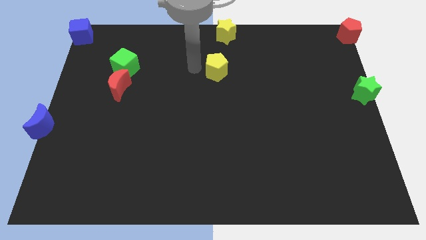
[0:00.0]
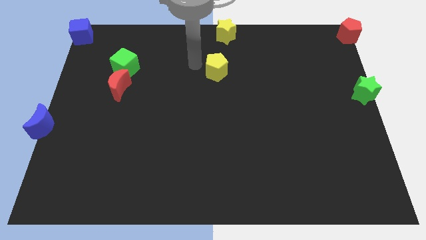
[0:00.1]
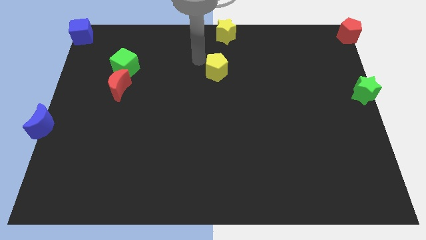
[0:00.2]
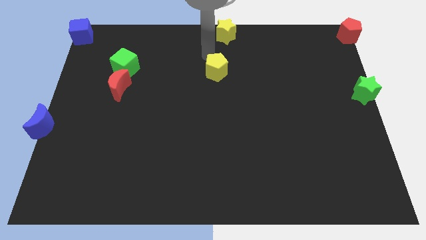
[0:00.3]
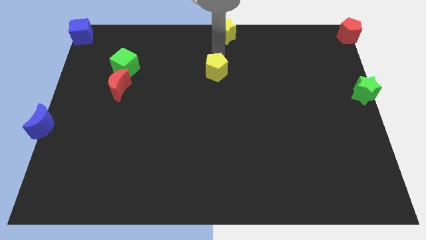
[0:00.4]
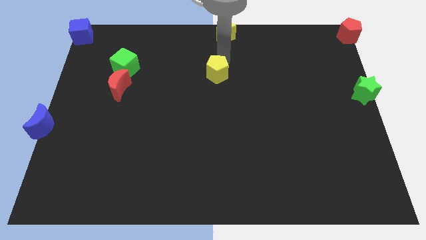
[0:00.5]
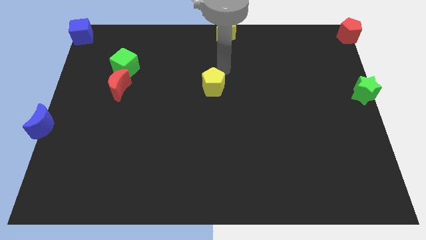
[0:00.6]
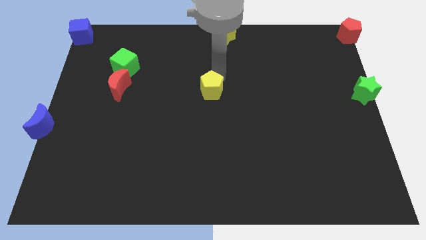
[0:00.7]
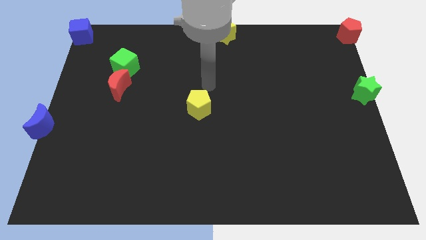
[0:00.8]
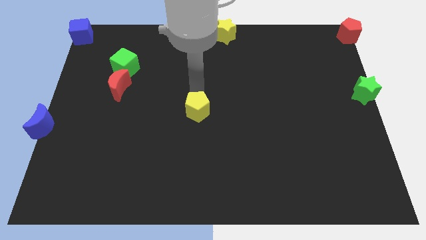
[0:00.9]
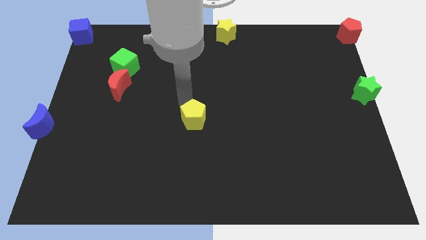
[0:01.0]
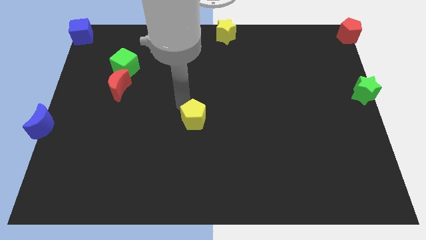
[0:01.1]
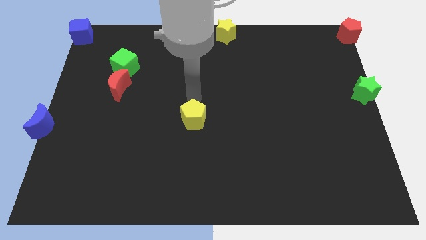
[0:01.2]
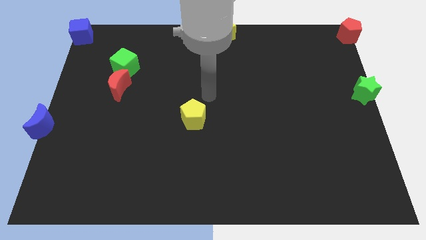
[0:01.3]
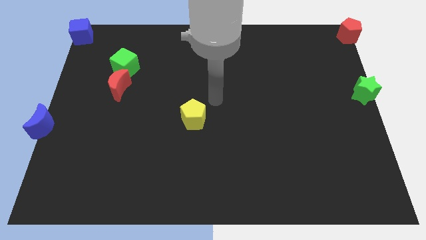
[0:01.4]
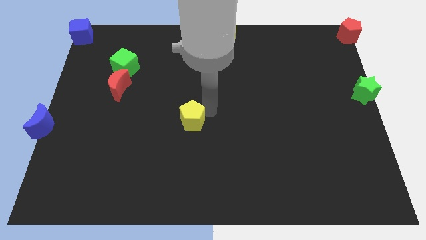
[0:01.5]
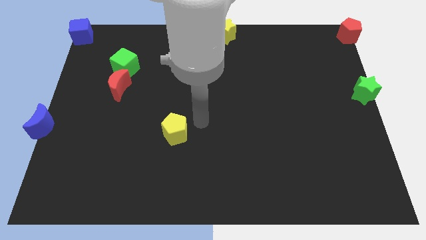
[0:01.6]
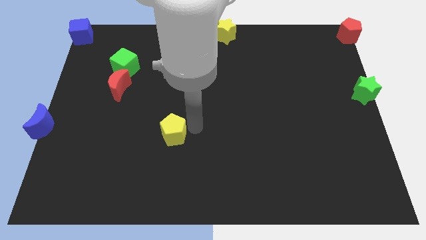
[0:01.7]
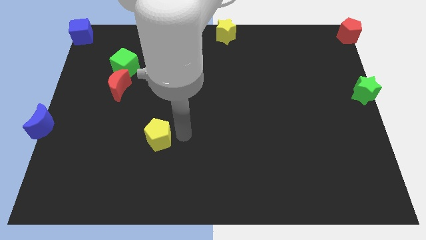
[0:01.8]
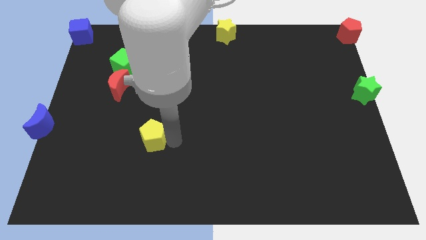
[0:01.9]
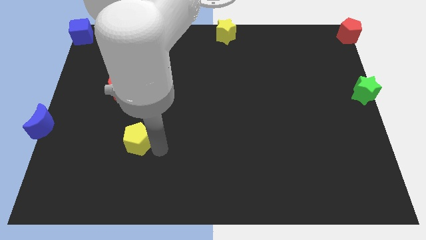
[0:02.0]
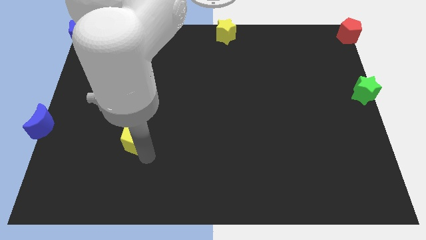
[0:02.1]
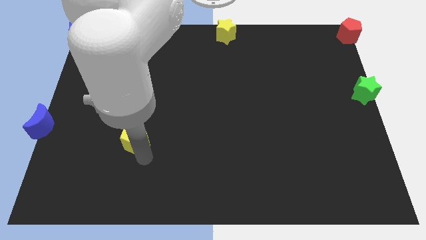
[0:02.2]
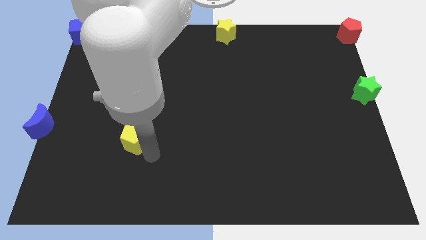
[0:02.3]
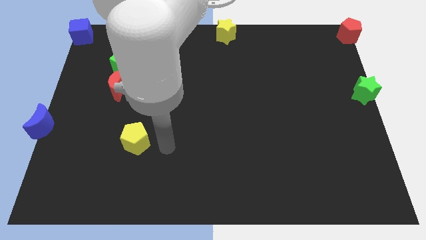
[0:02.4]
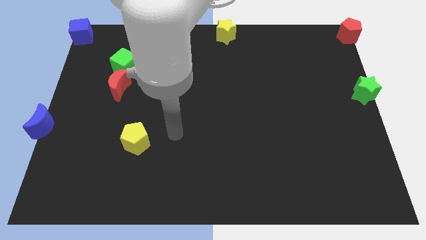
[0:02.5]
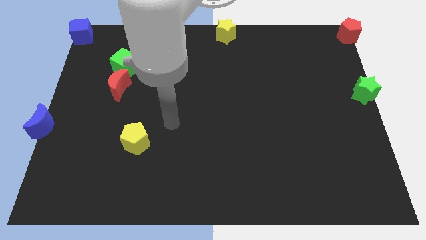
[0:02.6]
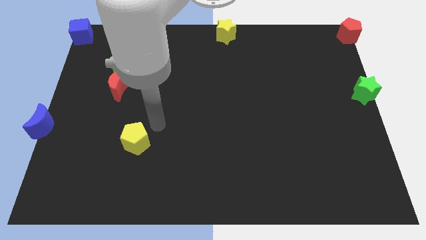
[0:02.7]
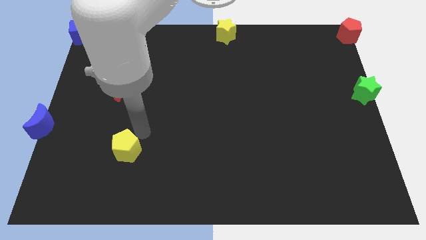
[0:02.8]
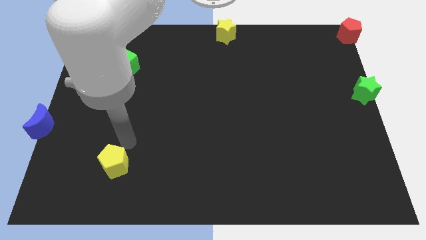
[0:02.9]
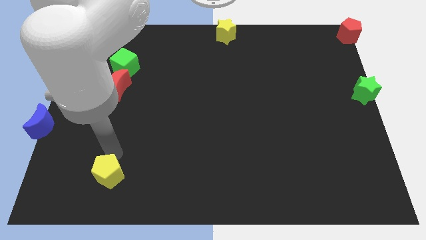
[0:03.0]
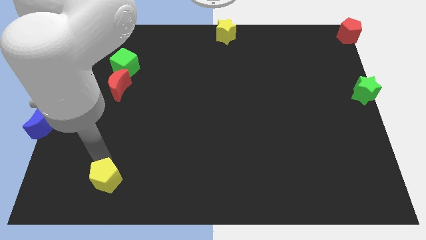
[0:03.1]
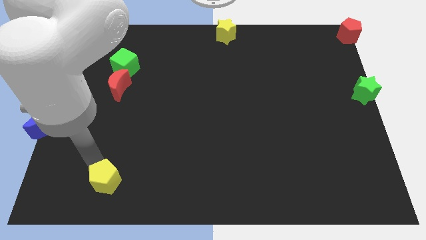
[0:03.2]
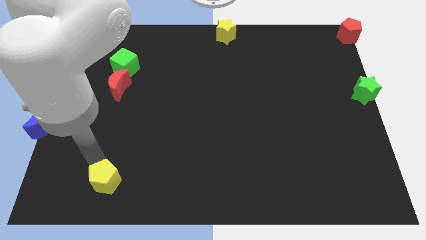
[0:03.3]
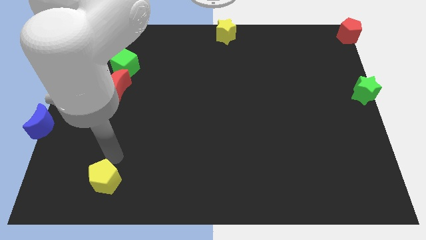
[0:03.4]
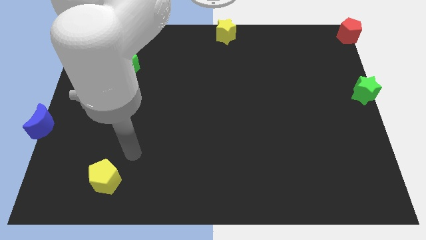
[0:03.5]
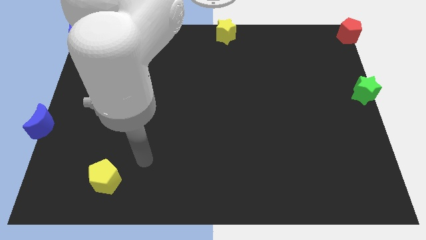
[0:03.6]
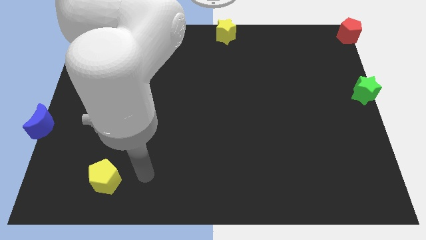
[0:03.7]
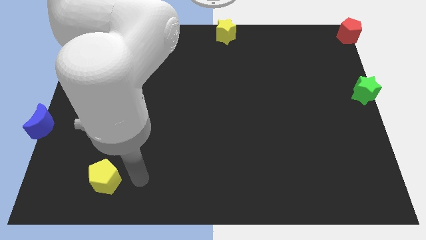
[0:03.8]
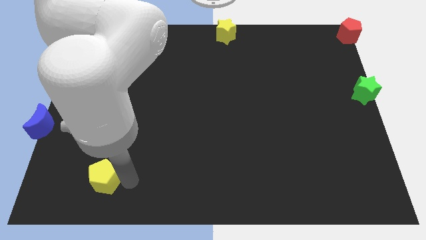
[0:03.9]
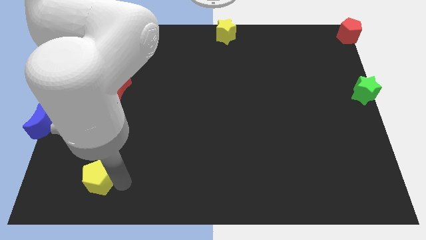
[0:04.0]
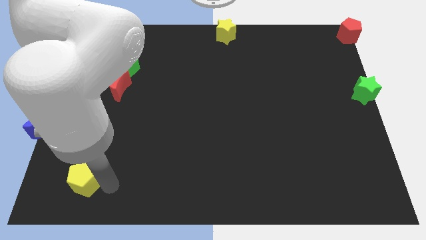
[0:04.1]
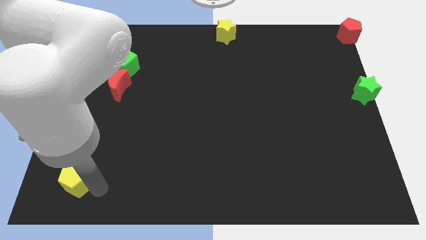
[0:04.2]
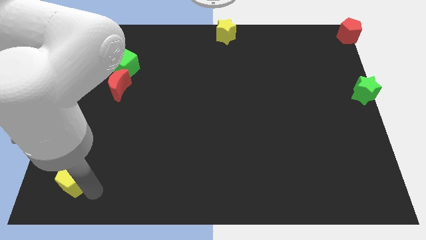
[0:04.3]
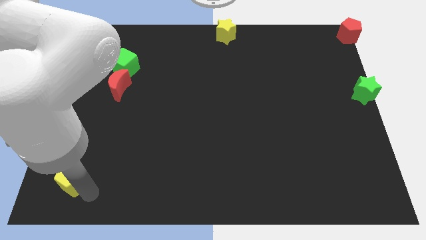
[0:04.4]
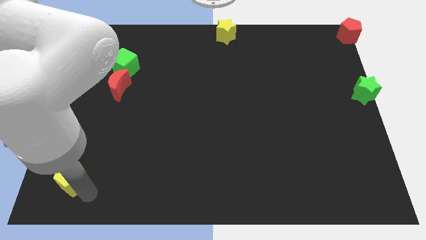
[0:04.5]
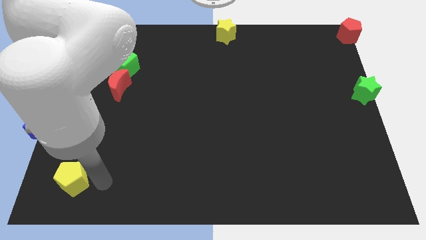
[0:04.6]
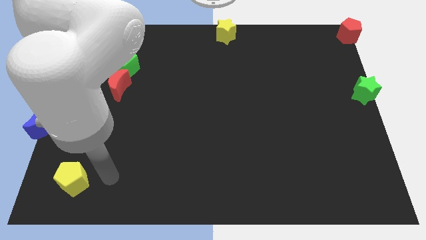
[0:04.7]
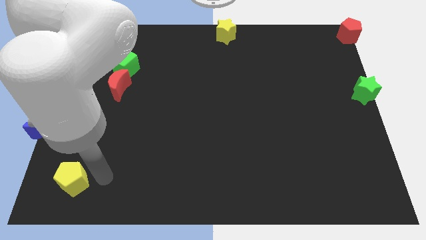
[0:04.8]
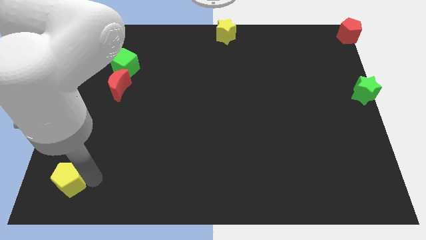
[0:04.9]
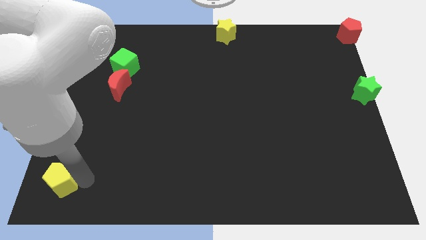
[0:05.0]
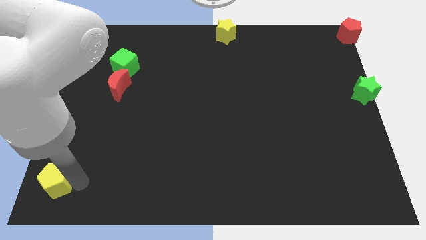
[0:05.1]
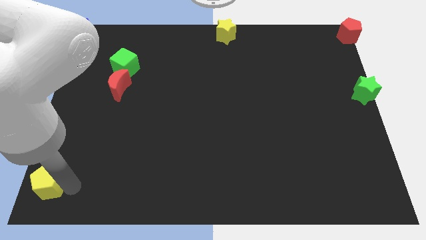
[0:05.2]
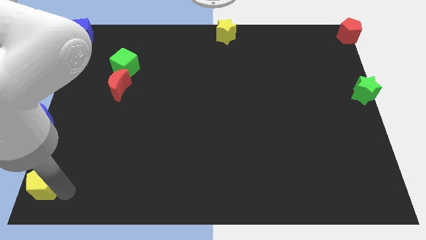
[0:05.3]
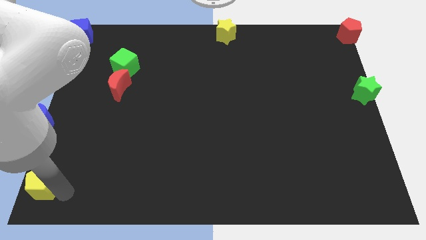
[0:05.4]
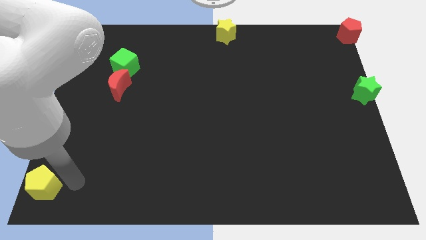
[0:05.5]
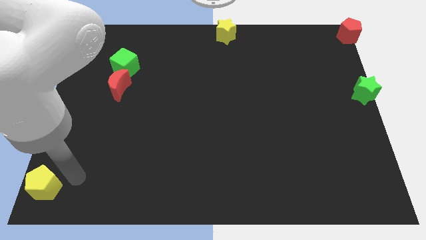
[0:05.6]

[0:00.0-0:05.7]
drag the yellow pentagon towards bottom left corner

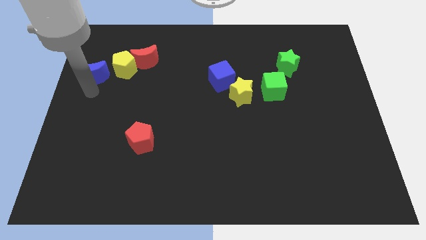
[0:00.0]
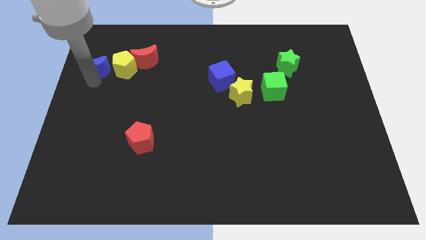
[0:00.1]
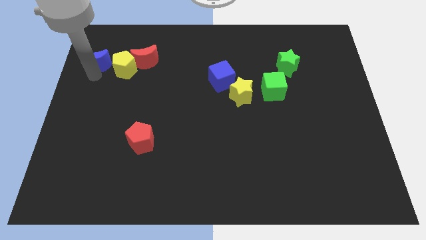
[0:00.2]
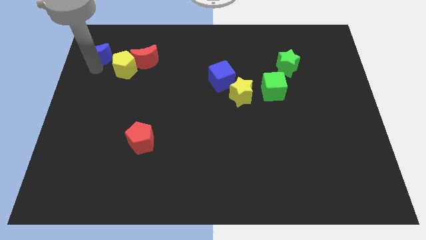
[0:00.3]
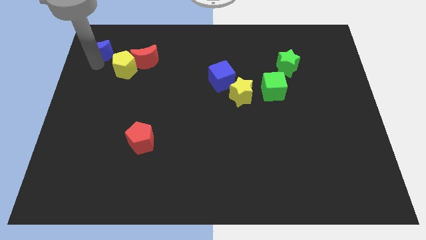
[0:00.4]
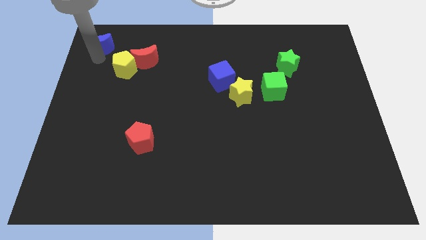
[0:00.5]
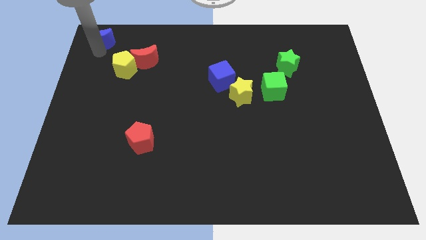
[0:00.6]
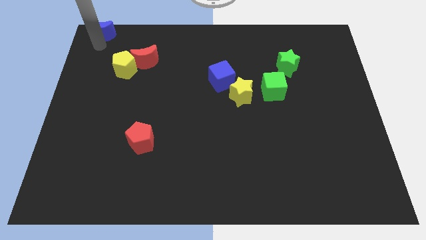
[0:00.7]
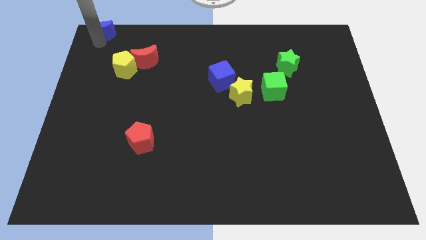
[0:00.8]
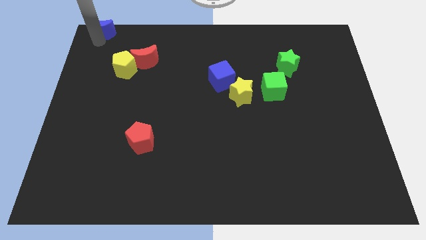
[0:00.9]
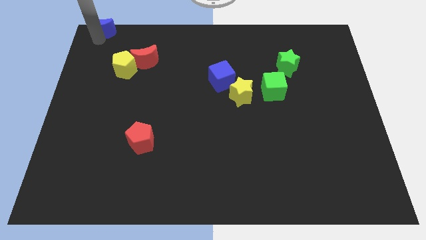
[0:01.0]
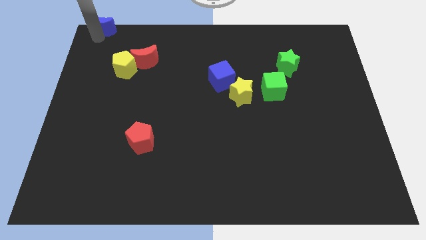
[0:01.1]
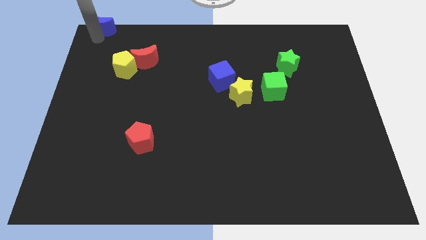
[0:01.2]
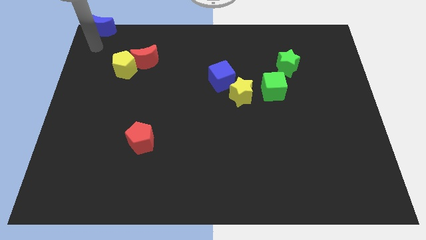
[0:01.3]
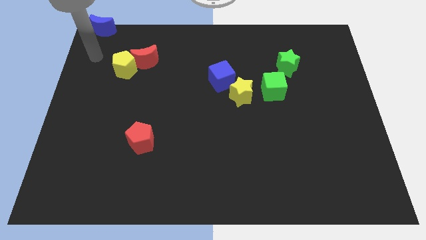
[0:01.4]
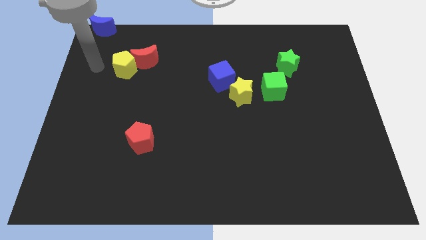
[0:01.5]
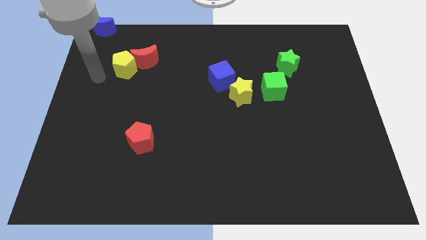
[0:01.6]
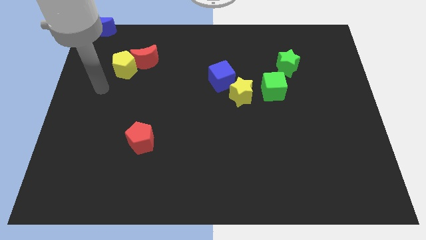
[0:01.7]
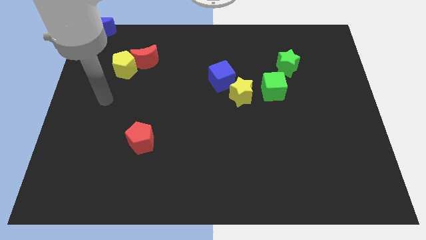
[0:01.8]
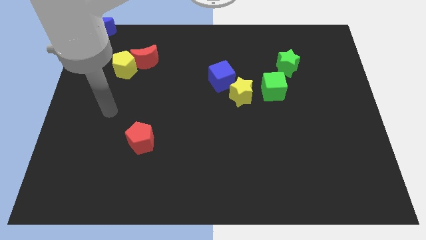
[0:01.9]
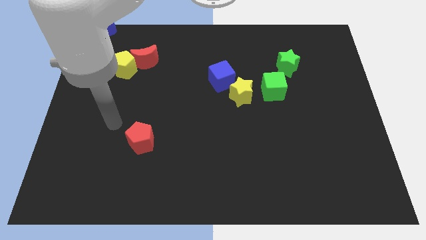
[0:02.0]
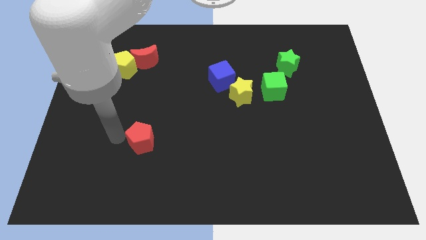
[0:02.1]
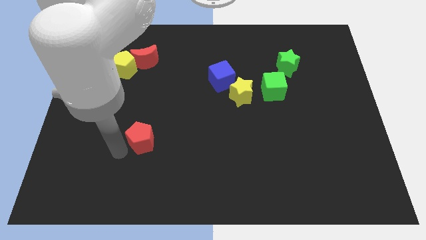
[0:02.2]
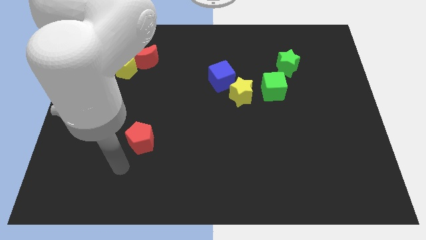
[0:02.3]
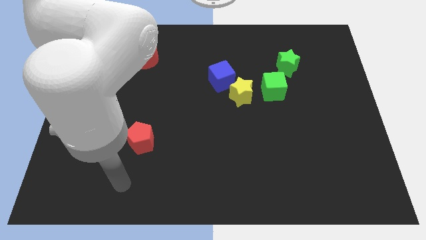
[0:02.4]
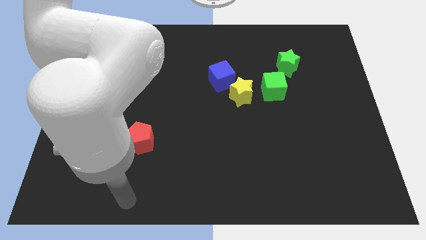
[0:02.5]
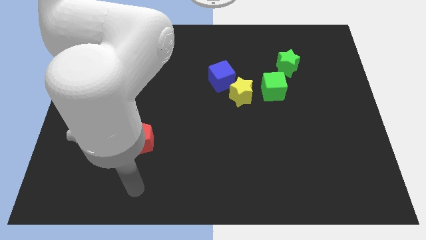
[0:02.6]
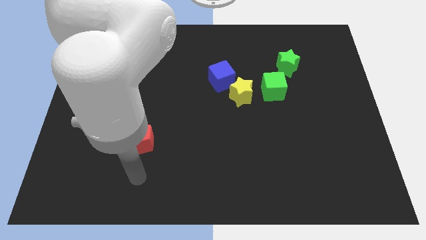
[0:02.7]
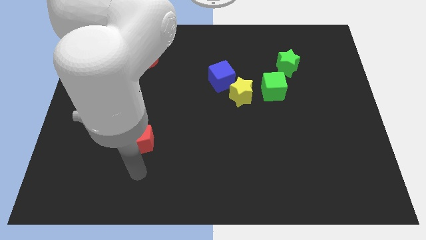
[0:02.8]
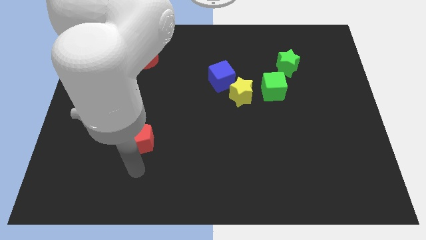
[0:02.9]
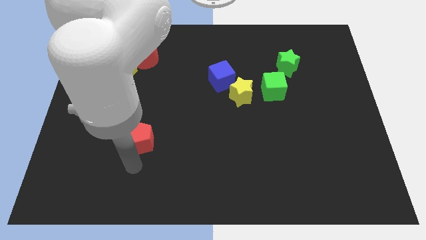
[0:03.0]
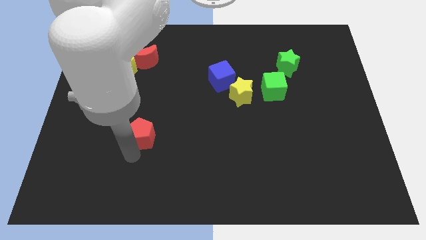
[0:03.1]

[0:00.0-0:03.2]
move the blue moon diagonally top left to the yellow pentagon
